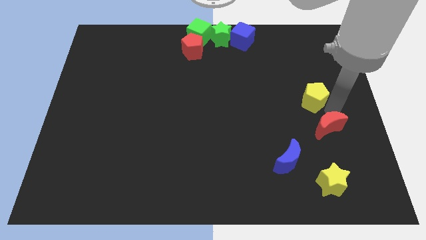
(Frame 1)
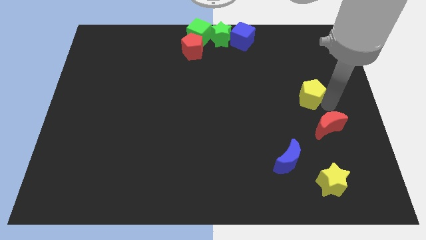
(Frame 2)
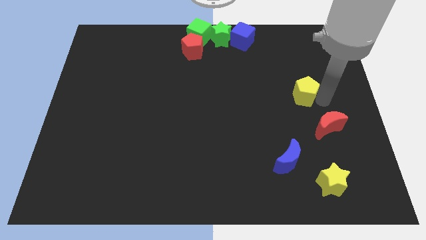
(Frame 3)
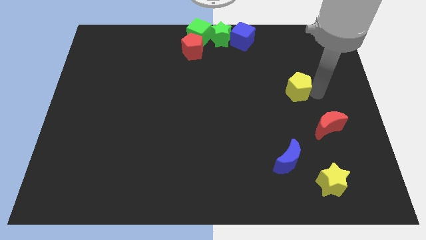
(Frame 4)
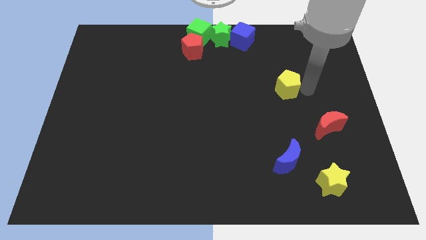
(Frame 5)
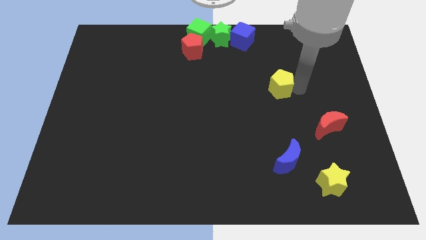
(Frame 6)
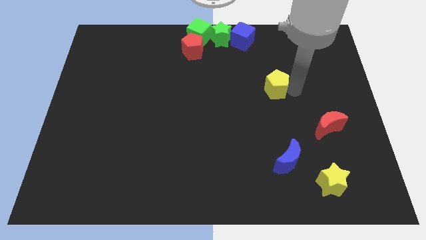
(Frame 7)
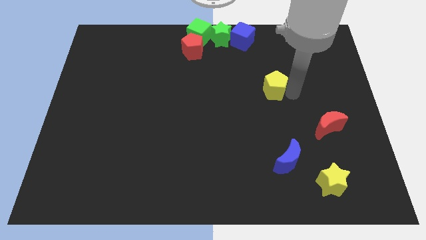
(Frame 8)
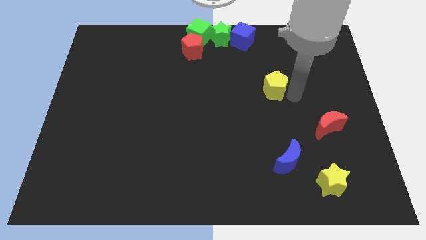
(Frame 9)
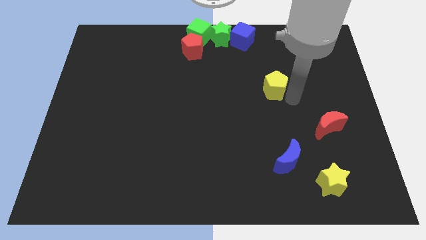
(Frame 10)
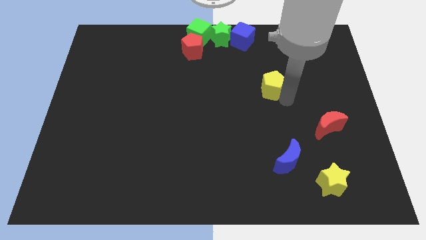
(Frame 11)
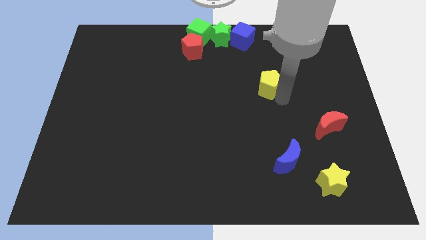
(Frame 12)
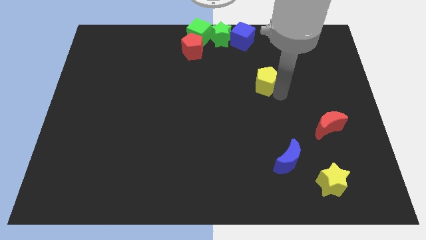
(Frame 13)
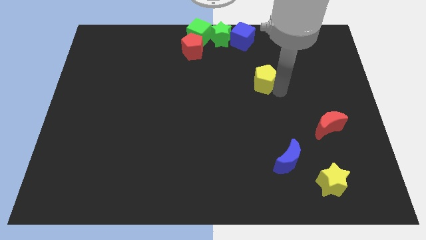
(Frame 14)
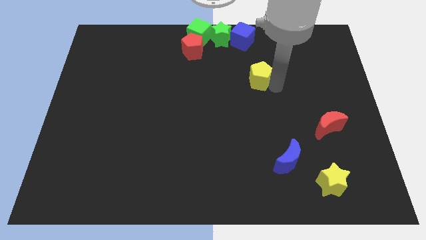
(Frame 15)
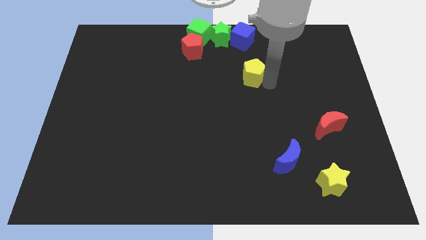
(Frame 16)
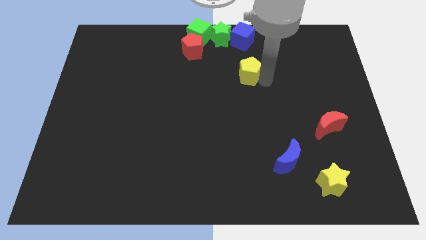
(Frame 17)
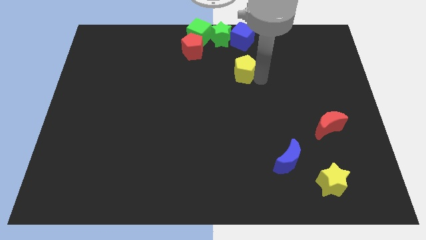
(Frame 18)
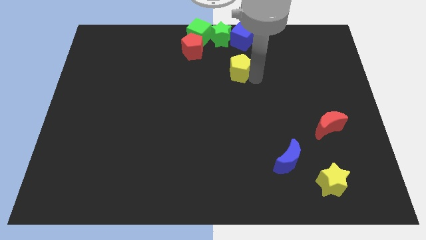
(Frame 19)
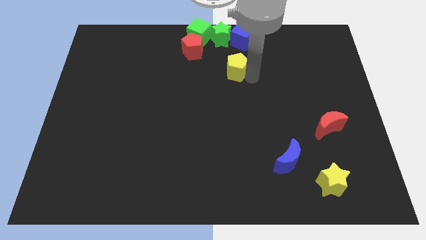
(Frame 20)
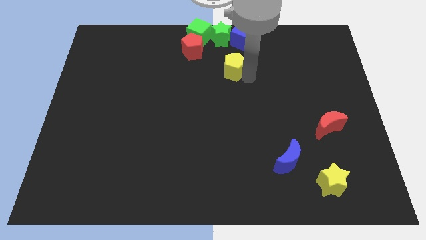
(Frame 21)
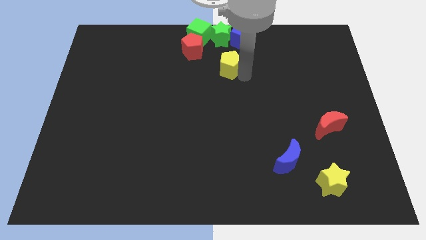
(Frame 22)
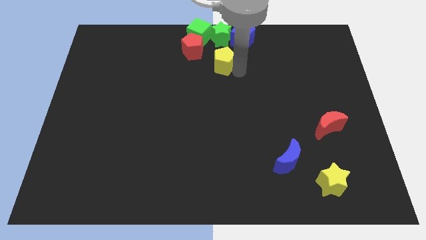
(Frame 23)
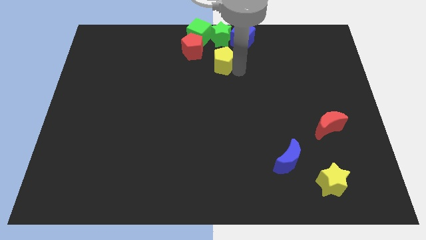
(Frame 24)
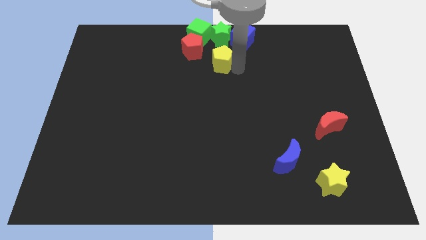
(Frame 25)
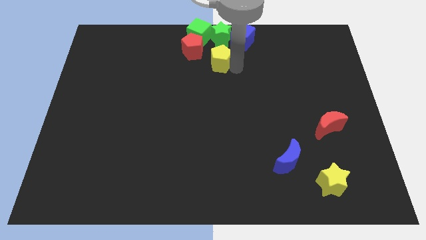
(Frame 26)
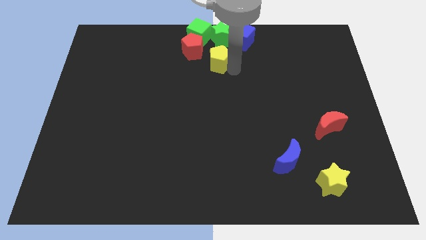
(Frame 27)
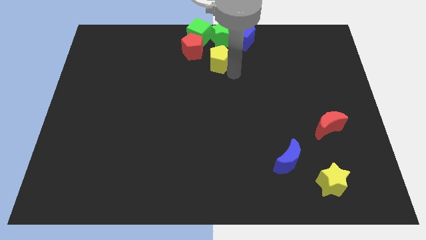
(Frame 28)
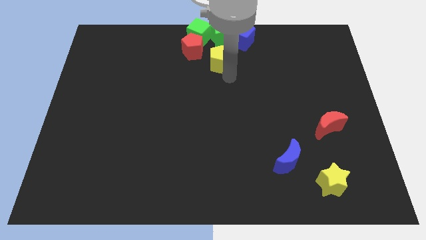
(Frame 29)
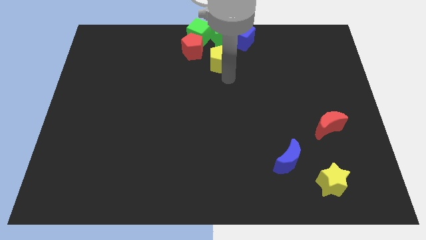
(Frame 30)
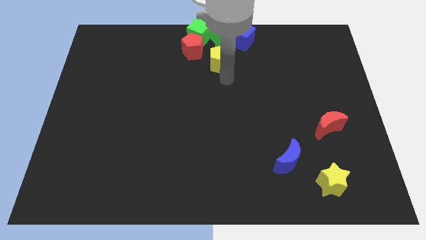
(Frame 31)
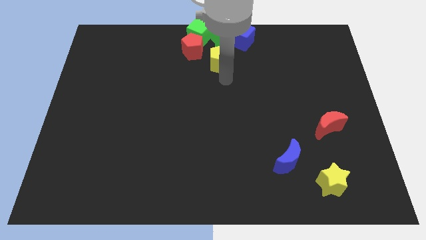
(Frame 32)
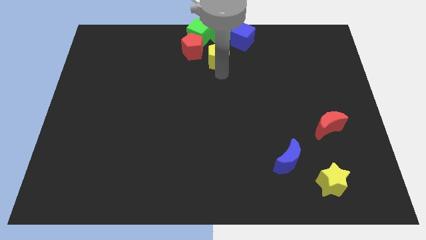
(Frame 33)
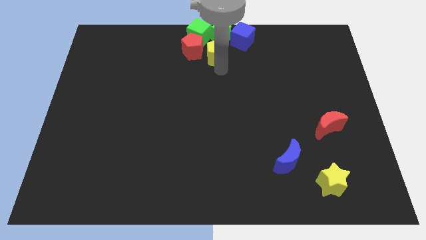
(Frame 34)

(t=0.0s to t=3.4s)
push the yellow pentagon below the green star

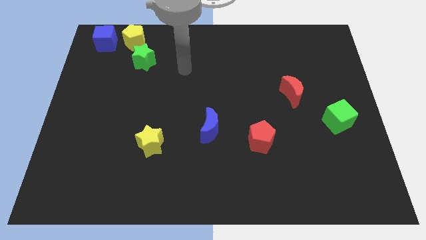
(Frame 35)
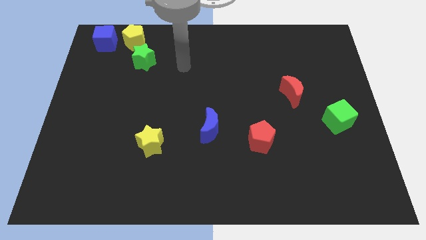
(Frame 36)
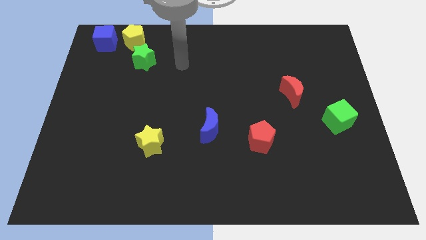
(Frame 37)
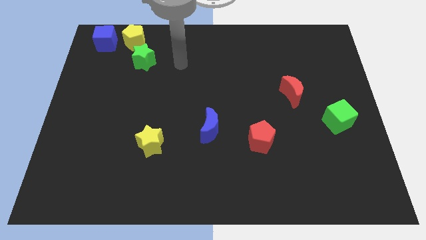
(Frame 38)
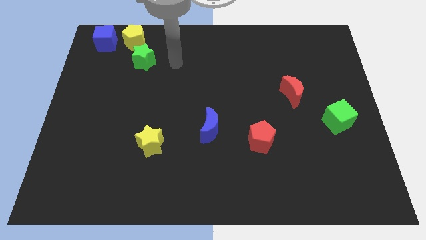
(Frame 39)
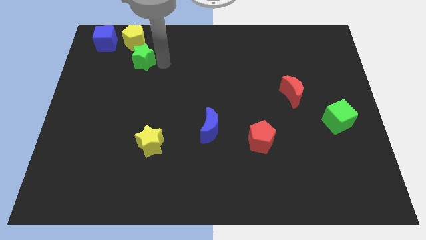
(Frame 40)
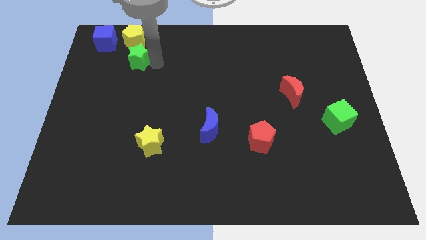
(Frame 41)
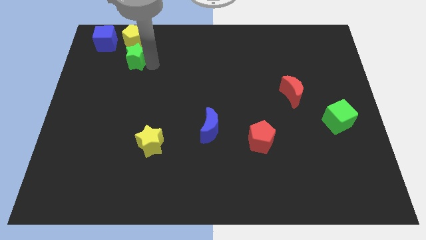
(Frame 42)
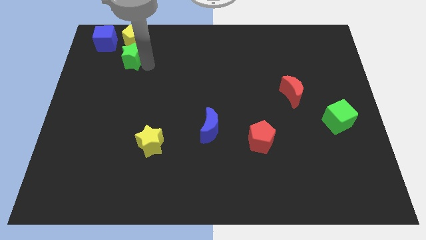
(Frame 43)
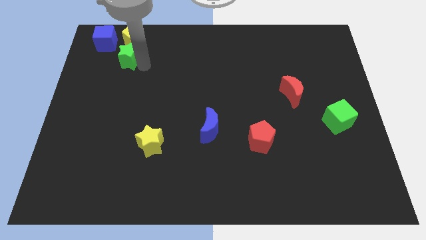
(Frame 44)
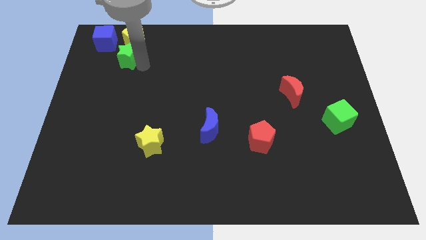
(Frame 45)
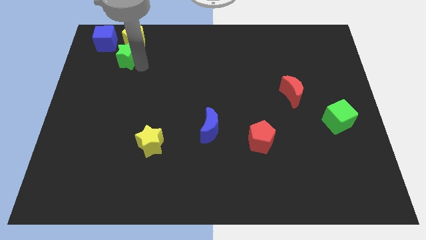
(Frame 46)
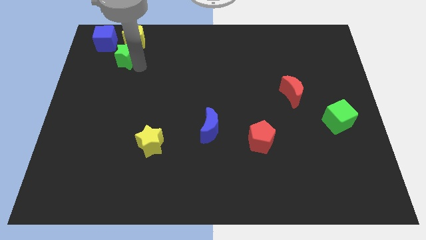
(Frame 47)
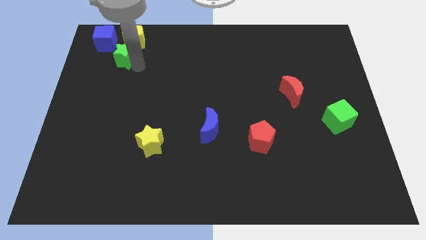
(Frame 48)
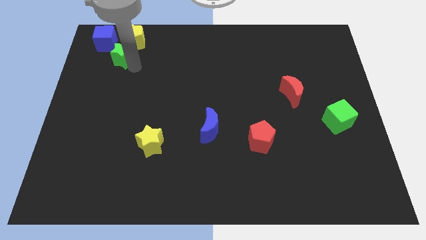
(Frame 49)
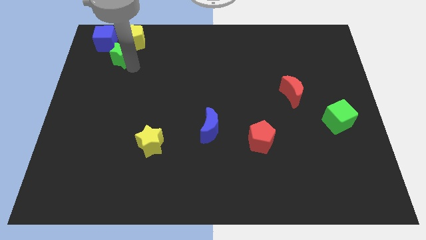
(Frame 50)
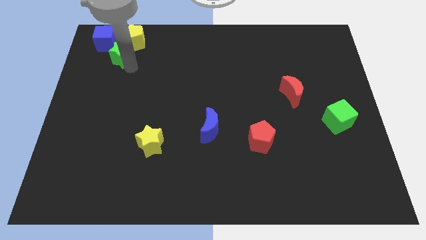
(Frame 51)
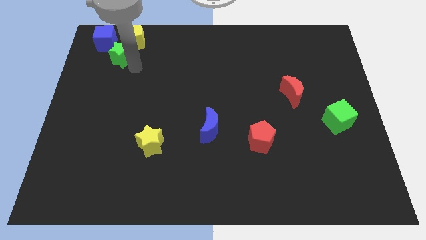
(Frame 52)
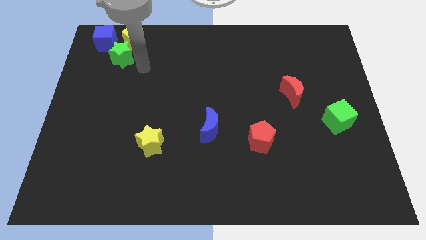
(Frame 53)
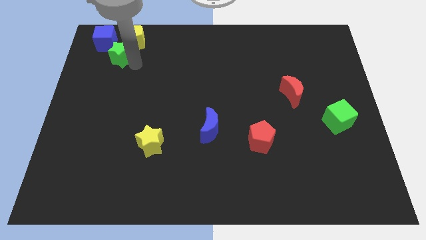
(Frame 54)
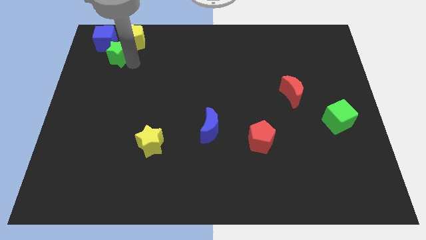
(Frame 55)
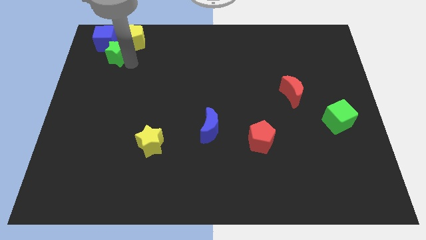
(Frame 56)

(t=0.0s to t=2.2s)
push the green star into the blue cube

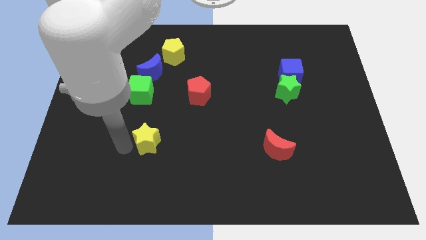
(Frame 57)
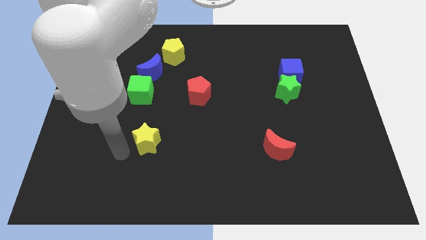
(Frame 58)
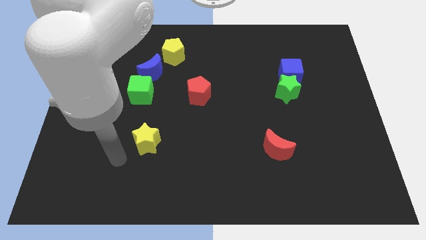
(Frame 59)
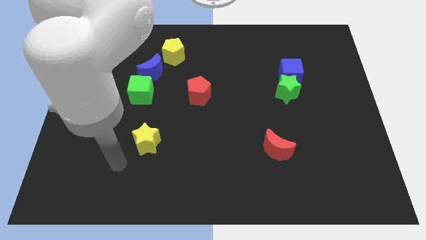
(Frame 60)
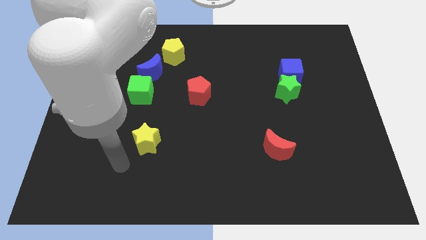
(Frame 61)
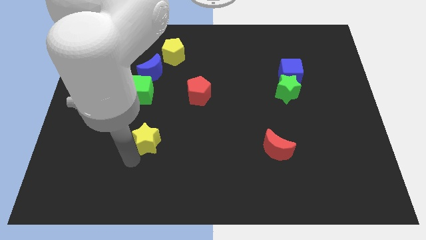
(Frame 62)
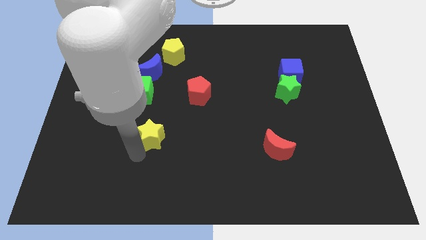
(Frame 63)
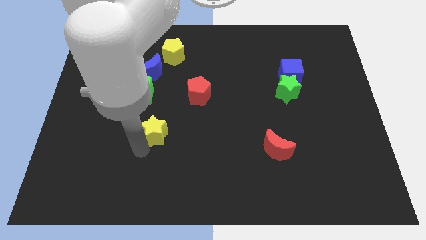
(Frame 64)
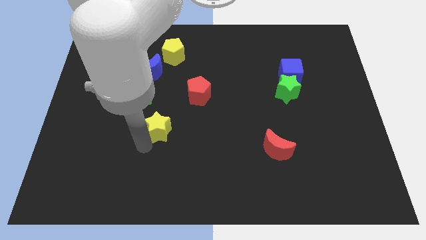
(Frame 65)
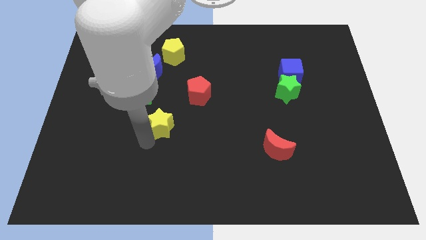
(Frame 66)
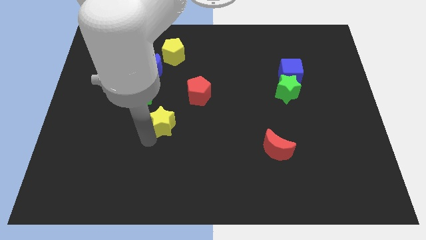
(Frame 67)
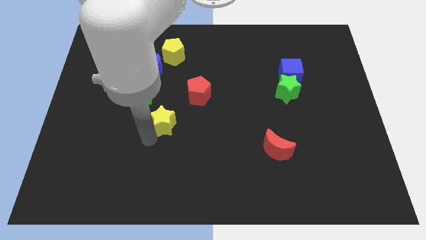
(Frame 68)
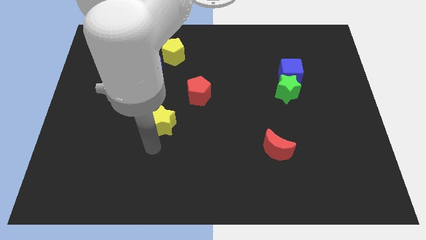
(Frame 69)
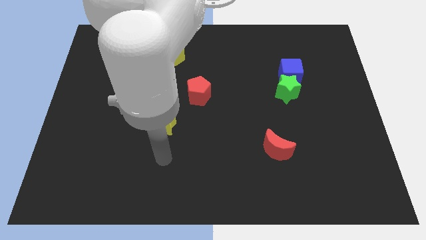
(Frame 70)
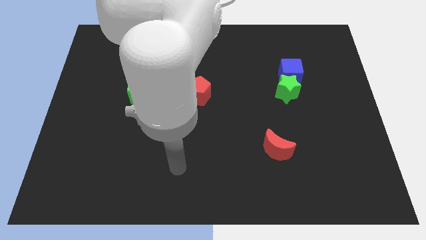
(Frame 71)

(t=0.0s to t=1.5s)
push the yellow star diagonal to the red pentagon

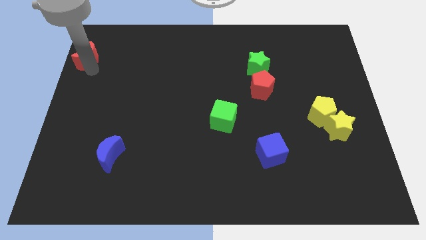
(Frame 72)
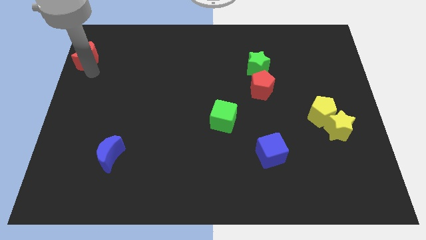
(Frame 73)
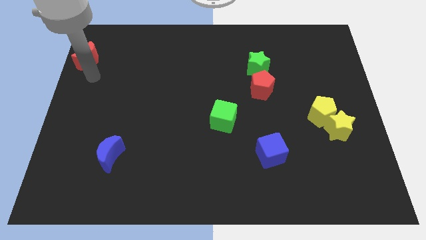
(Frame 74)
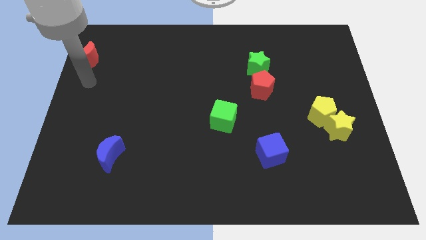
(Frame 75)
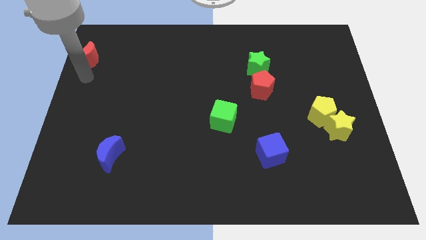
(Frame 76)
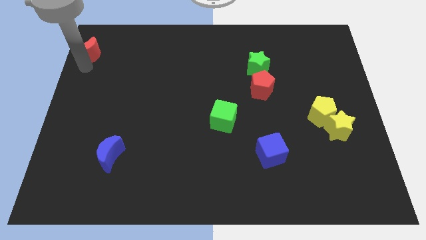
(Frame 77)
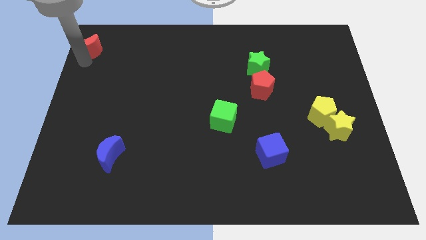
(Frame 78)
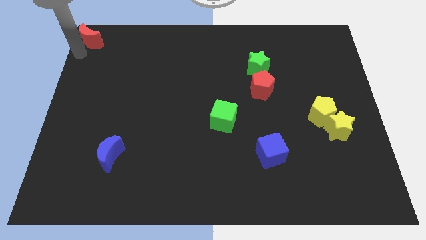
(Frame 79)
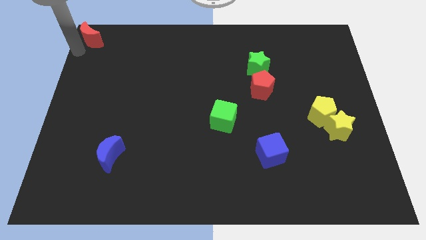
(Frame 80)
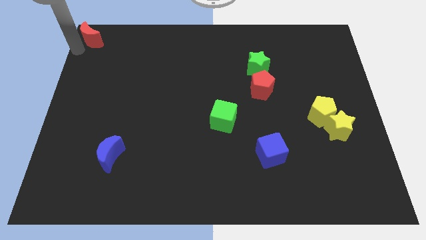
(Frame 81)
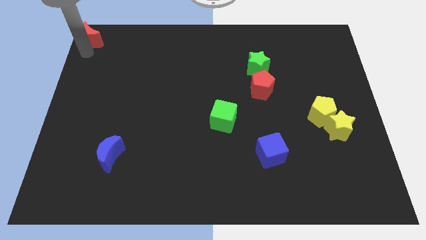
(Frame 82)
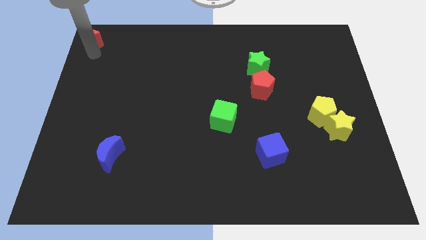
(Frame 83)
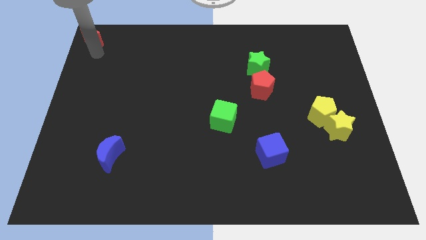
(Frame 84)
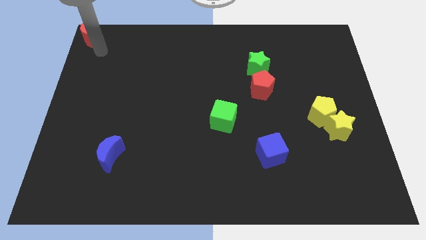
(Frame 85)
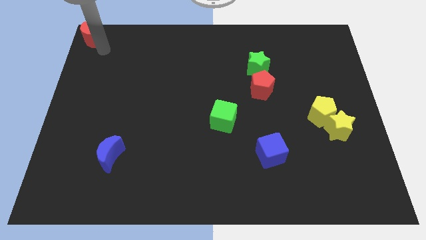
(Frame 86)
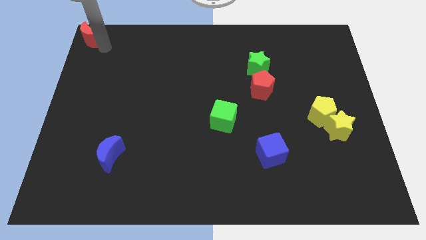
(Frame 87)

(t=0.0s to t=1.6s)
slide the red moon to the top left corner of the board

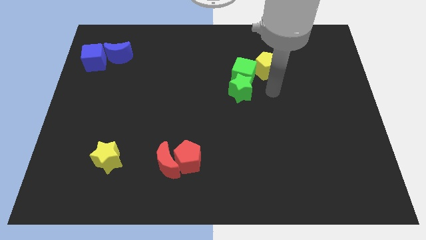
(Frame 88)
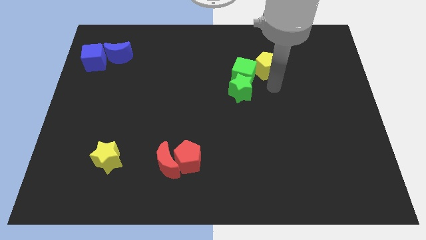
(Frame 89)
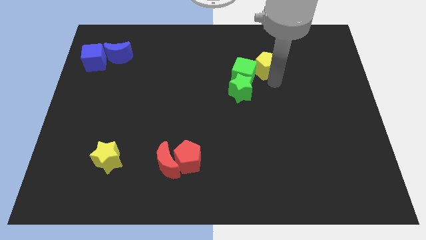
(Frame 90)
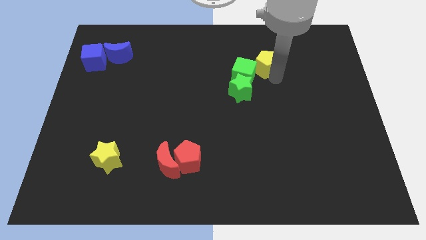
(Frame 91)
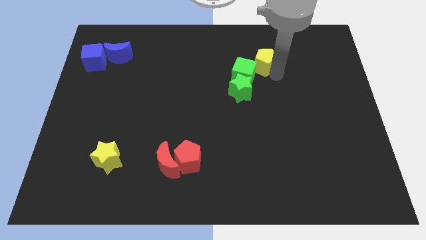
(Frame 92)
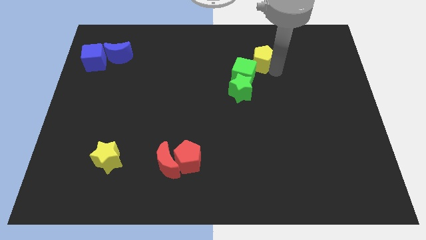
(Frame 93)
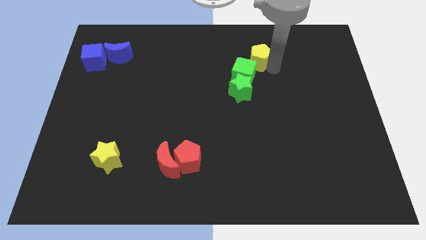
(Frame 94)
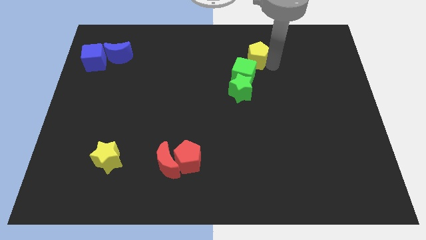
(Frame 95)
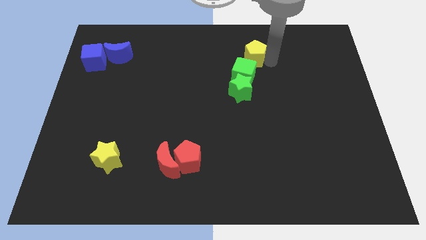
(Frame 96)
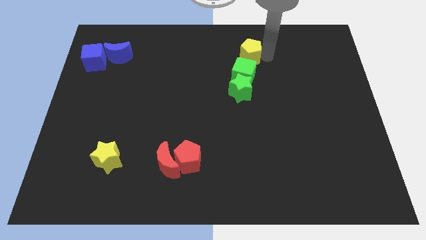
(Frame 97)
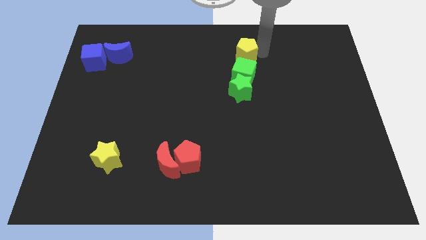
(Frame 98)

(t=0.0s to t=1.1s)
move the yellow pentagon to the top of the green cube
